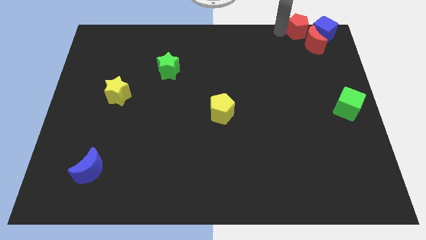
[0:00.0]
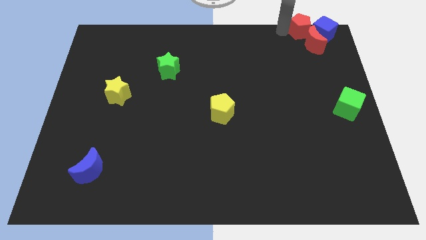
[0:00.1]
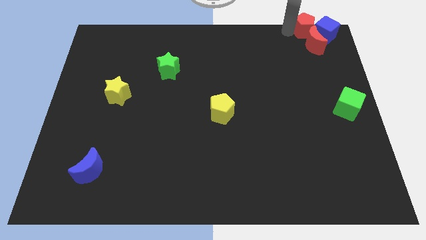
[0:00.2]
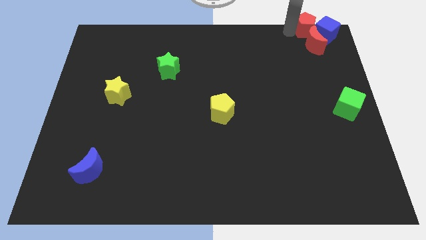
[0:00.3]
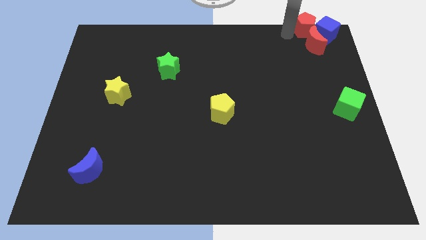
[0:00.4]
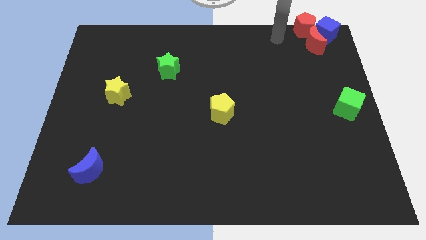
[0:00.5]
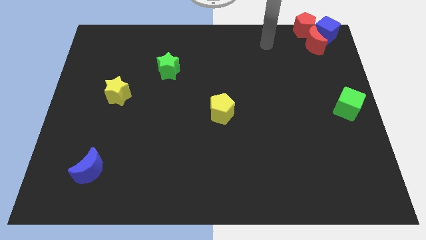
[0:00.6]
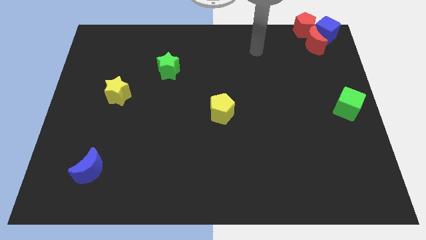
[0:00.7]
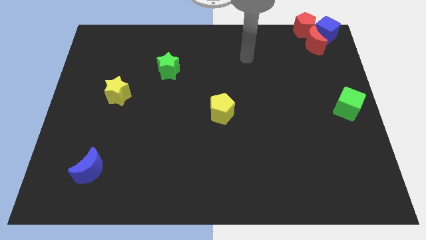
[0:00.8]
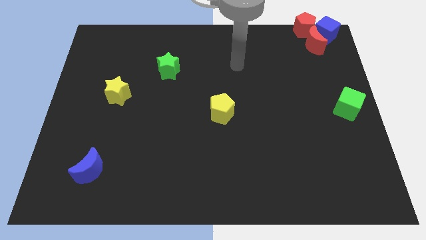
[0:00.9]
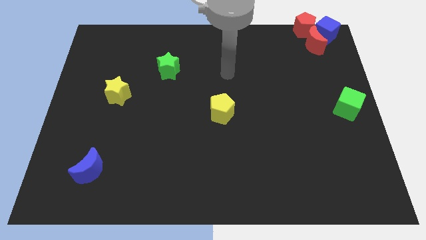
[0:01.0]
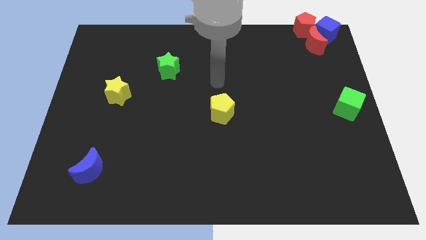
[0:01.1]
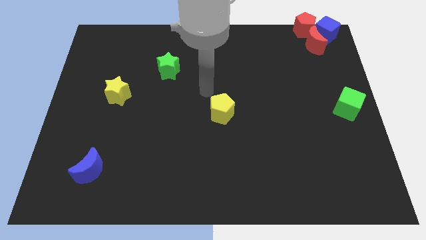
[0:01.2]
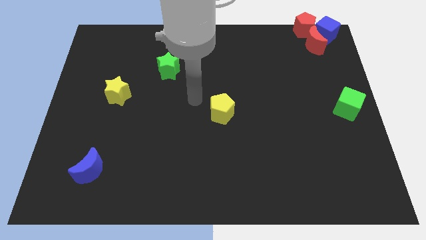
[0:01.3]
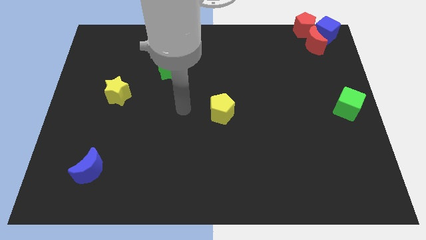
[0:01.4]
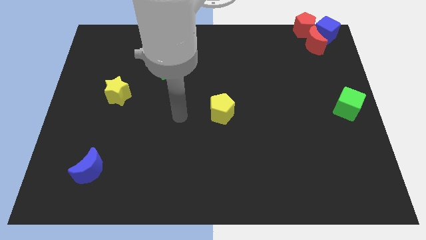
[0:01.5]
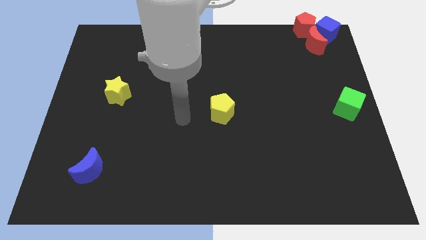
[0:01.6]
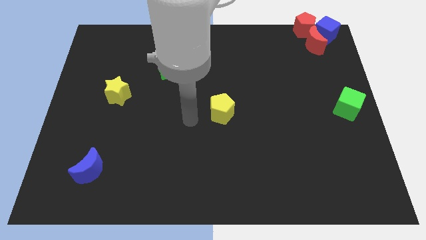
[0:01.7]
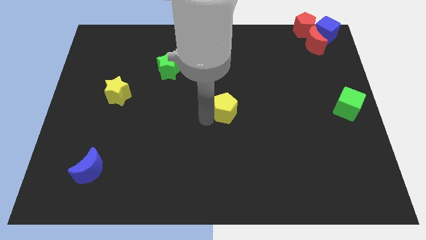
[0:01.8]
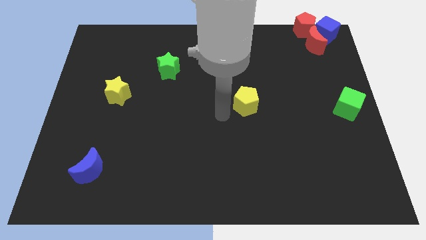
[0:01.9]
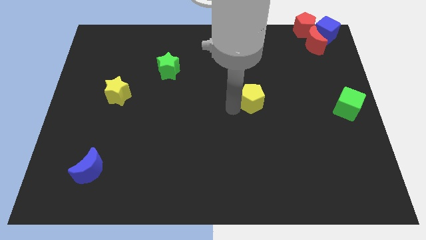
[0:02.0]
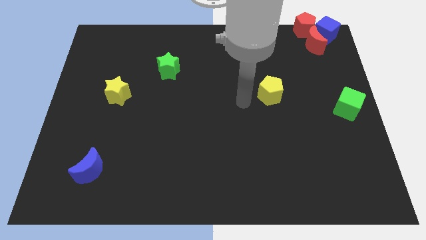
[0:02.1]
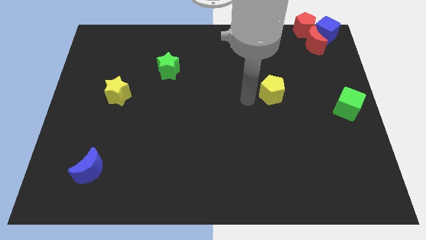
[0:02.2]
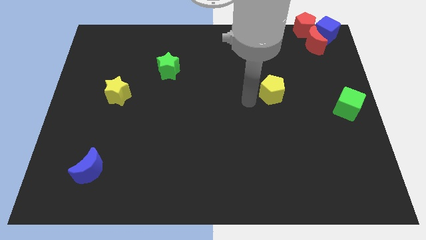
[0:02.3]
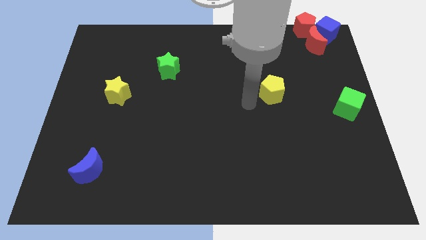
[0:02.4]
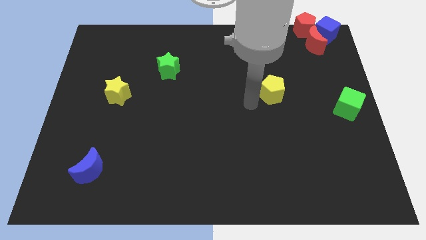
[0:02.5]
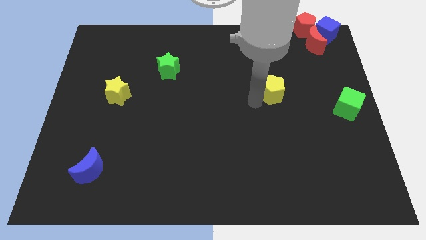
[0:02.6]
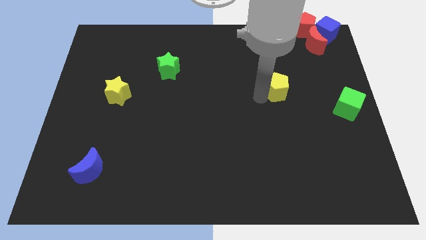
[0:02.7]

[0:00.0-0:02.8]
place the yellow pentagon left to the green cube

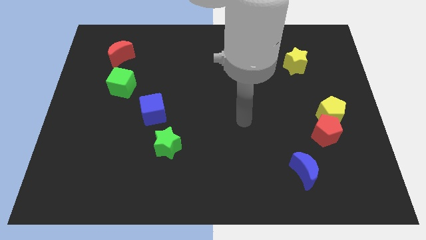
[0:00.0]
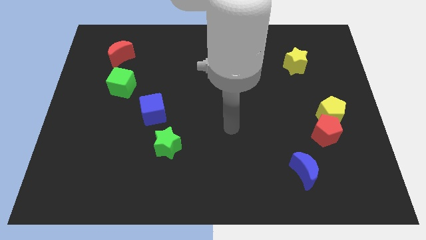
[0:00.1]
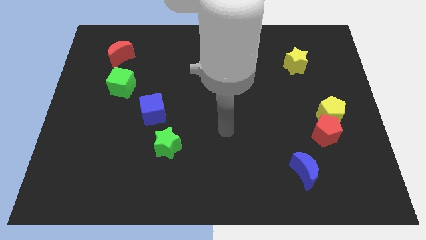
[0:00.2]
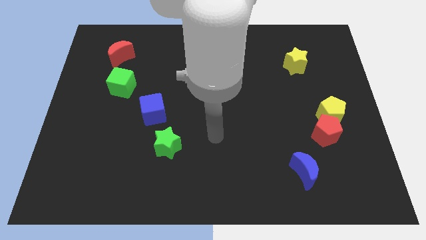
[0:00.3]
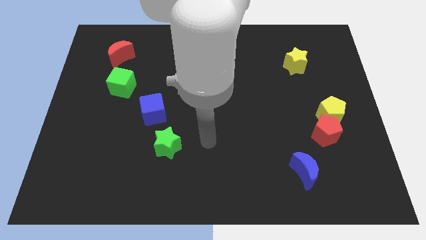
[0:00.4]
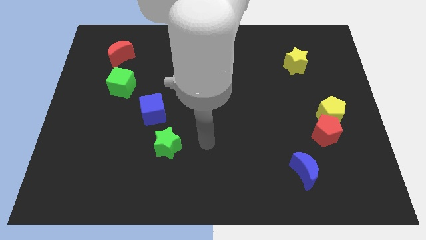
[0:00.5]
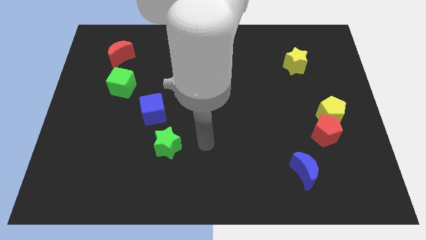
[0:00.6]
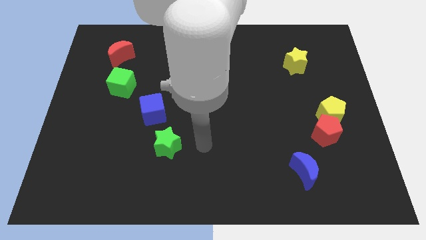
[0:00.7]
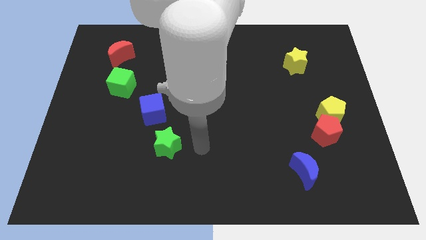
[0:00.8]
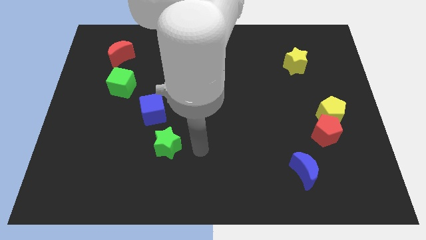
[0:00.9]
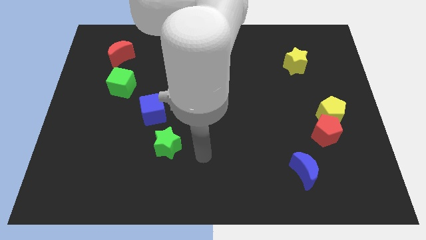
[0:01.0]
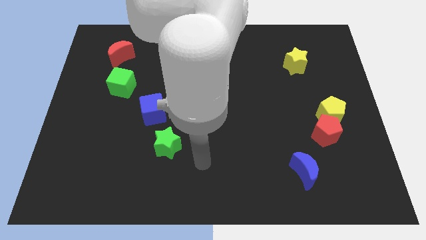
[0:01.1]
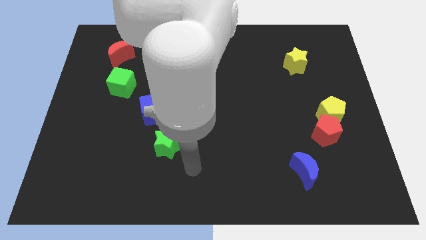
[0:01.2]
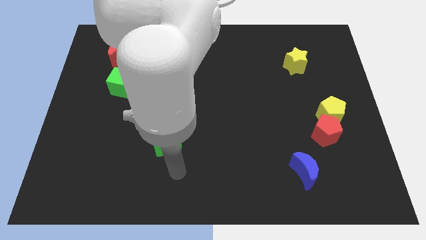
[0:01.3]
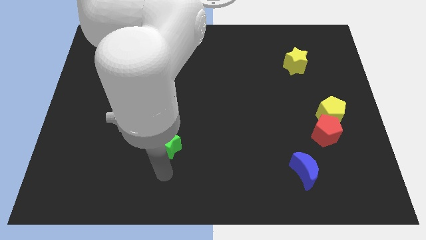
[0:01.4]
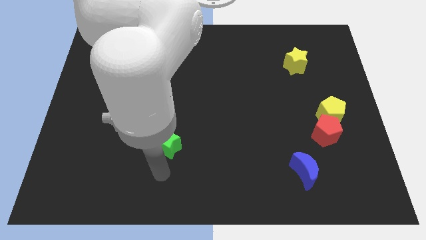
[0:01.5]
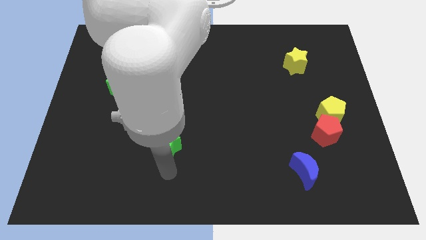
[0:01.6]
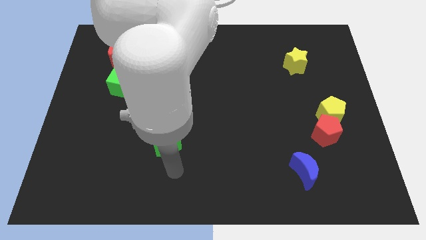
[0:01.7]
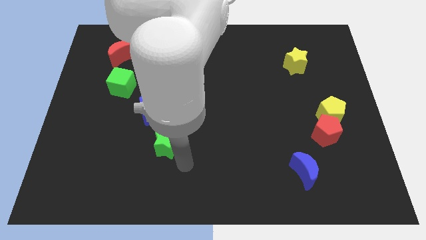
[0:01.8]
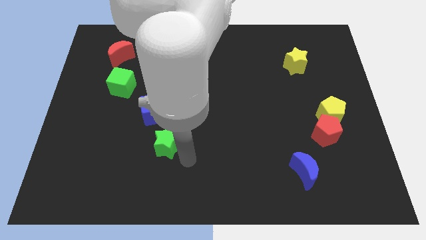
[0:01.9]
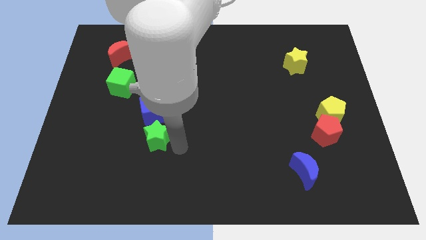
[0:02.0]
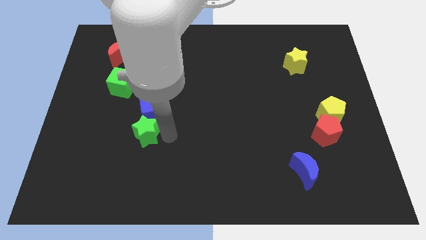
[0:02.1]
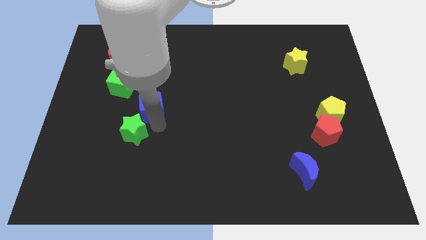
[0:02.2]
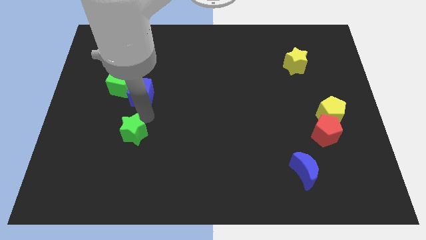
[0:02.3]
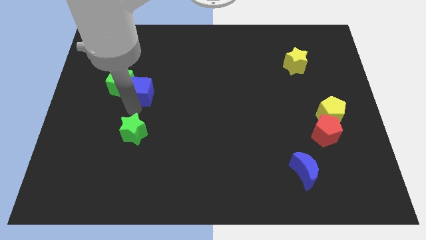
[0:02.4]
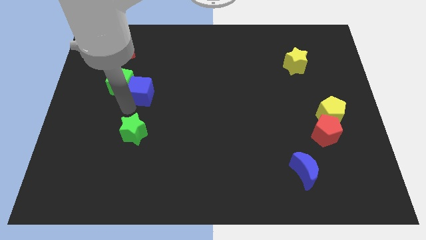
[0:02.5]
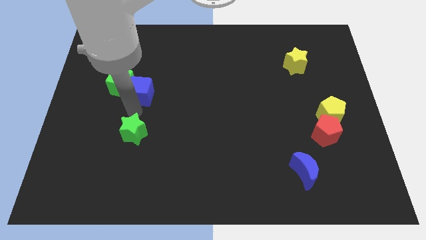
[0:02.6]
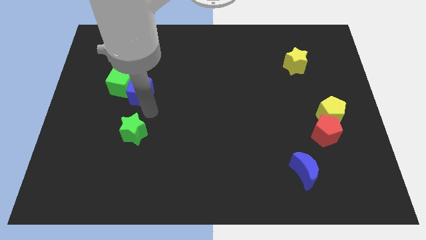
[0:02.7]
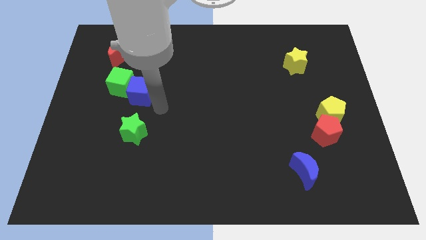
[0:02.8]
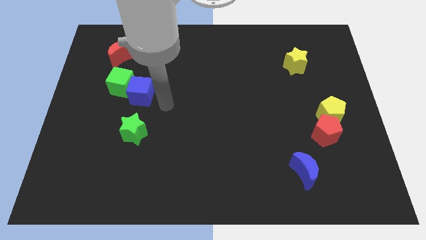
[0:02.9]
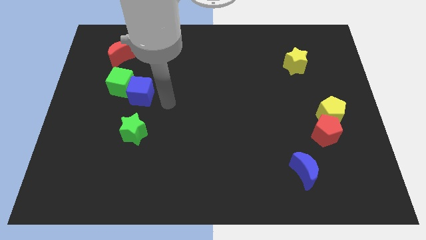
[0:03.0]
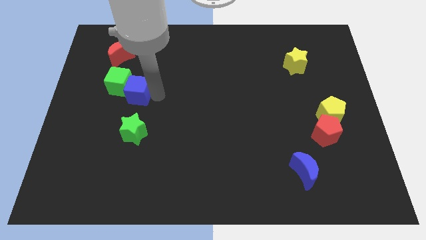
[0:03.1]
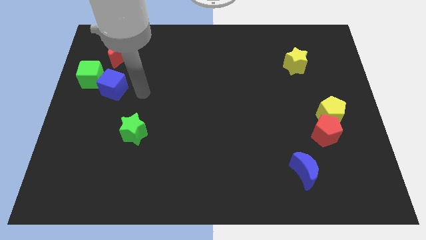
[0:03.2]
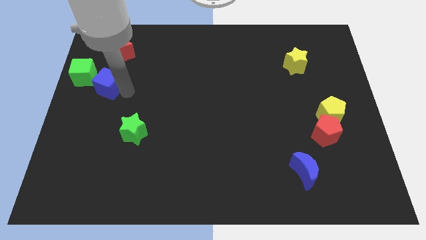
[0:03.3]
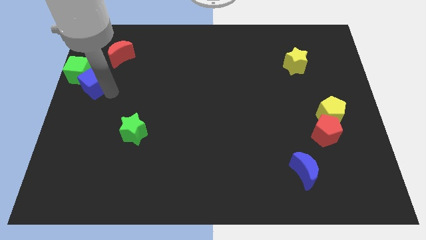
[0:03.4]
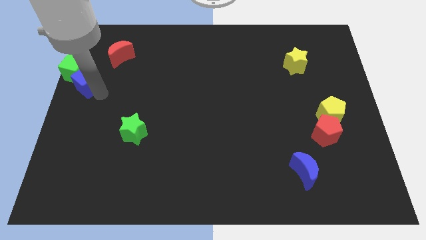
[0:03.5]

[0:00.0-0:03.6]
separate the green cube and blue block from green star

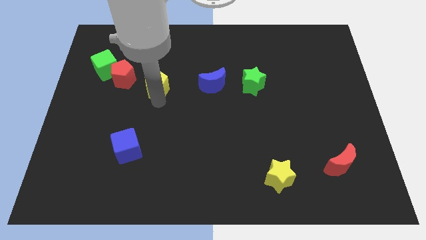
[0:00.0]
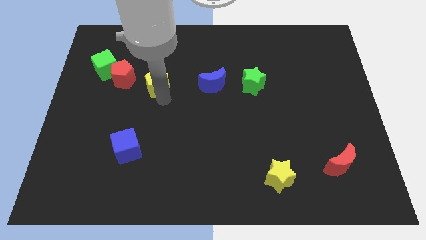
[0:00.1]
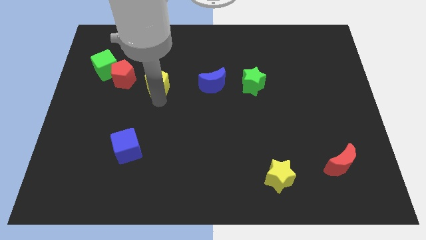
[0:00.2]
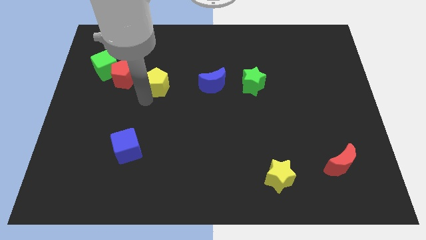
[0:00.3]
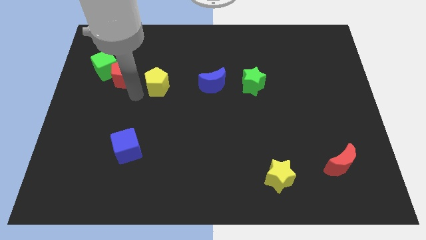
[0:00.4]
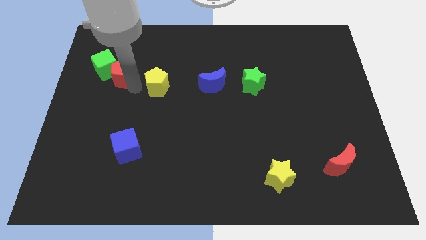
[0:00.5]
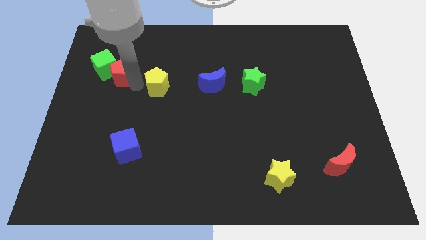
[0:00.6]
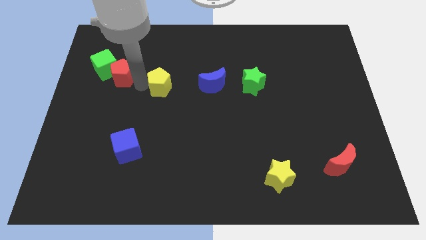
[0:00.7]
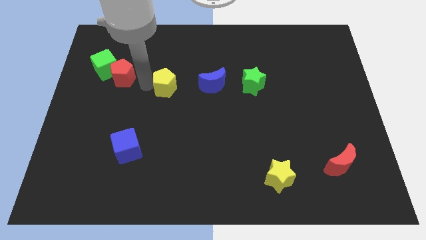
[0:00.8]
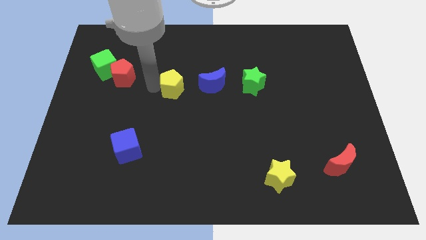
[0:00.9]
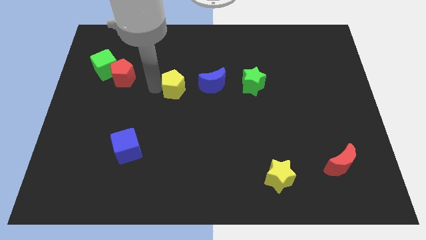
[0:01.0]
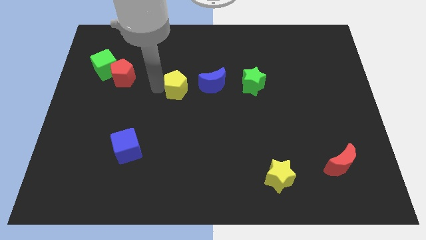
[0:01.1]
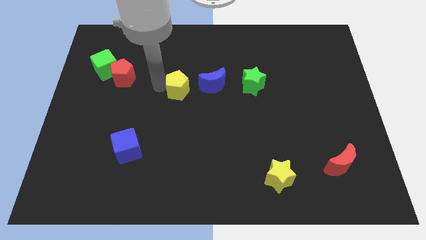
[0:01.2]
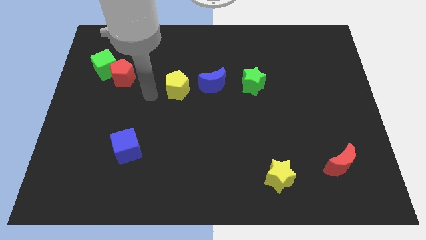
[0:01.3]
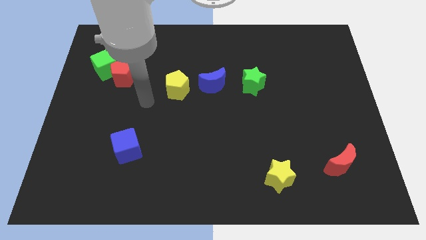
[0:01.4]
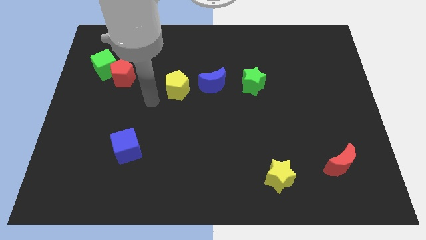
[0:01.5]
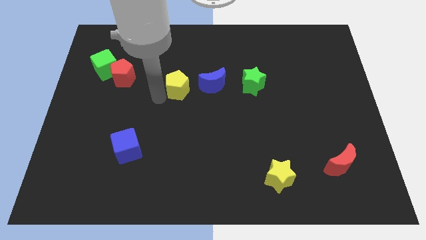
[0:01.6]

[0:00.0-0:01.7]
slide the yellow pentagon towards the center of the board

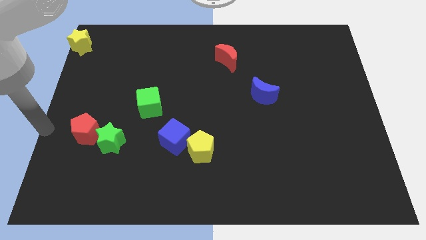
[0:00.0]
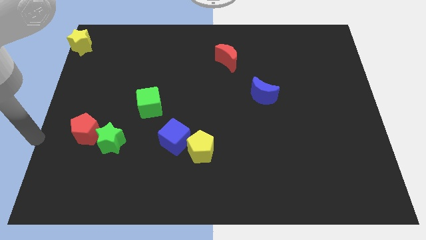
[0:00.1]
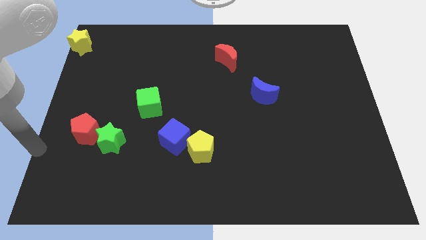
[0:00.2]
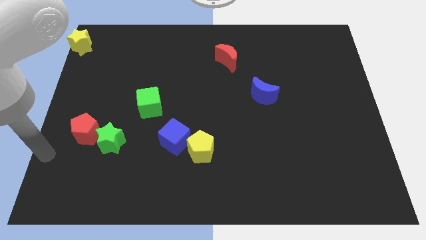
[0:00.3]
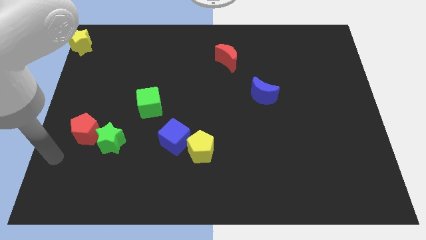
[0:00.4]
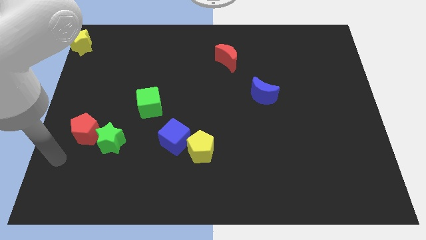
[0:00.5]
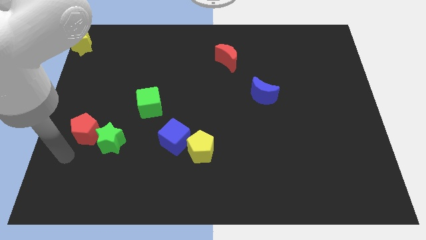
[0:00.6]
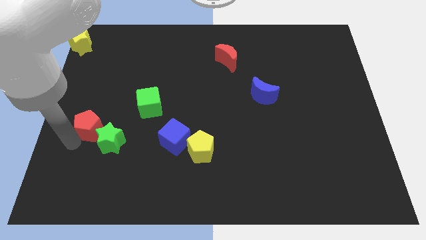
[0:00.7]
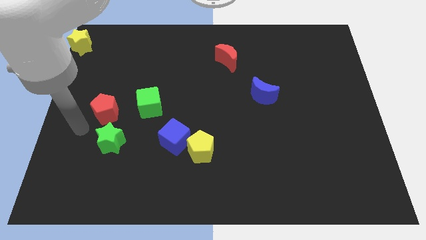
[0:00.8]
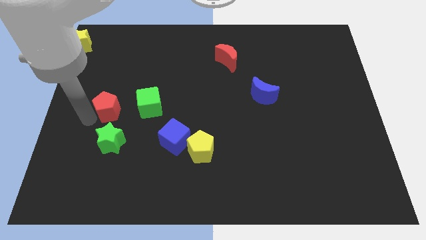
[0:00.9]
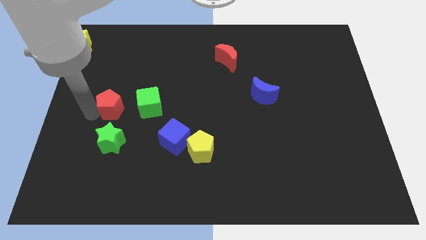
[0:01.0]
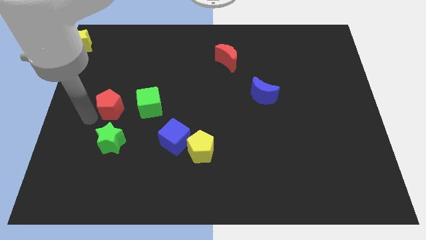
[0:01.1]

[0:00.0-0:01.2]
move the red pentagon to the top side of the green star
